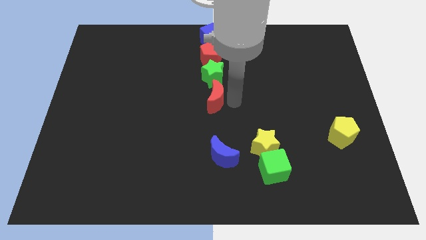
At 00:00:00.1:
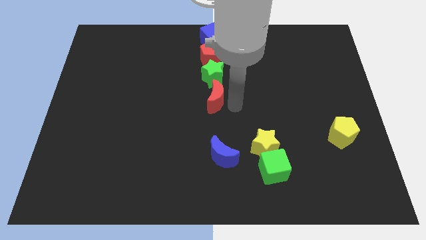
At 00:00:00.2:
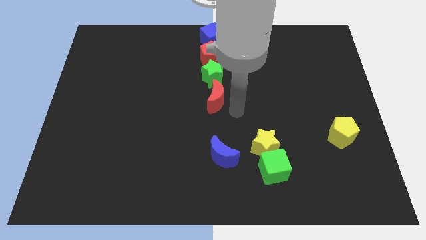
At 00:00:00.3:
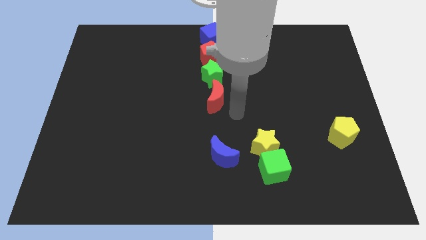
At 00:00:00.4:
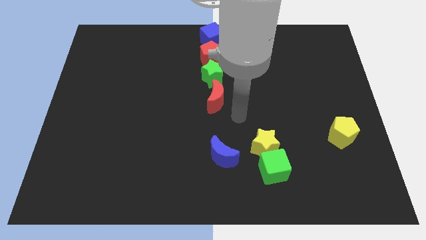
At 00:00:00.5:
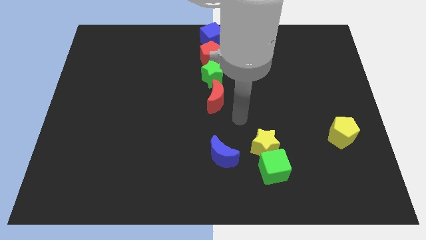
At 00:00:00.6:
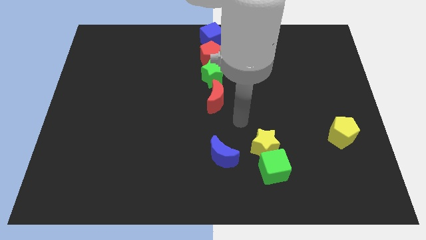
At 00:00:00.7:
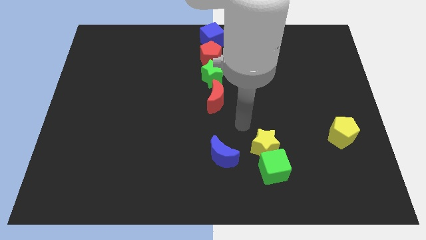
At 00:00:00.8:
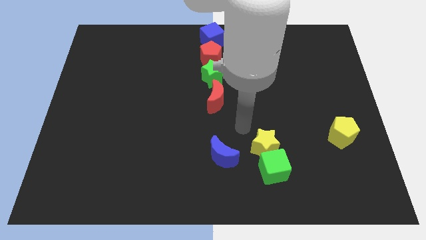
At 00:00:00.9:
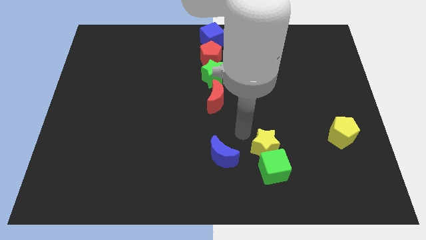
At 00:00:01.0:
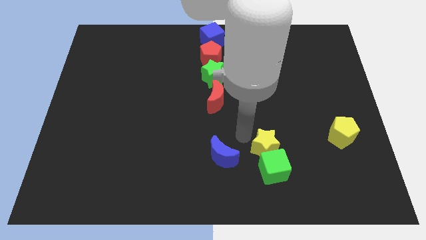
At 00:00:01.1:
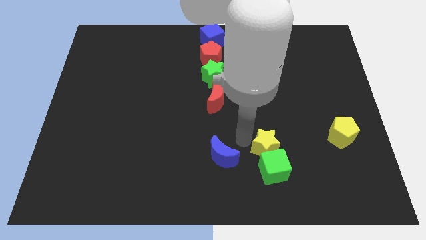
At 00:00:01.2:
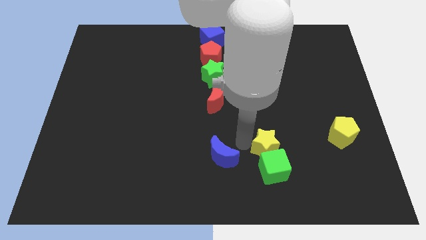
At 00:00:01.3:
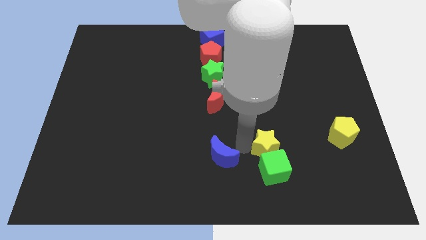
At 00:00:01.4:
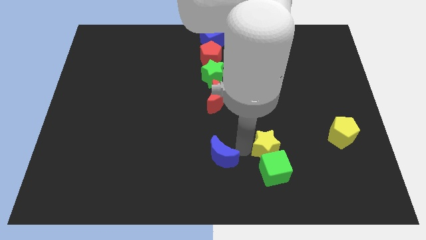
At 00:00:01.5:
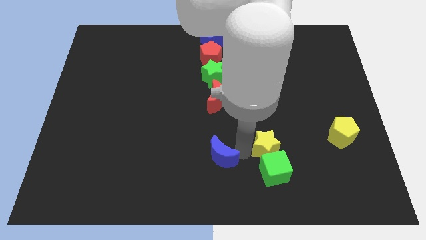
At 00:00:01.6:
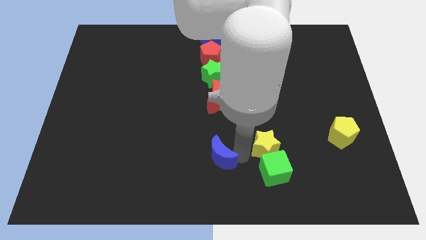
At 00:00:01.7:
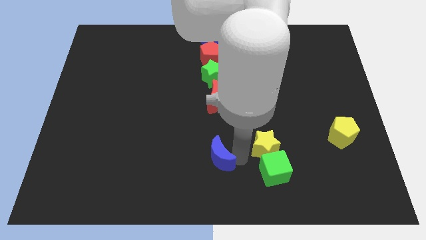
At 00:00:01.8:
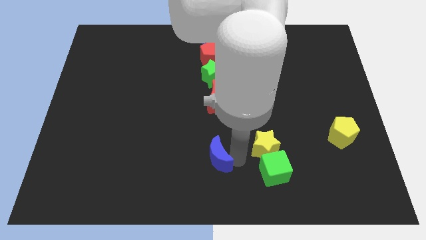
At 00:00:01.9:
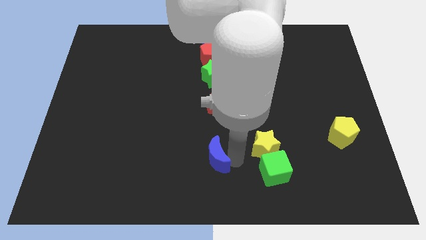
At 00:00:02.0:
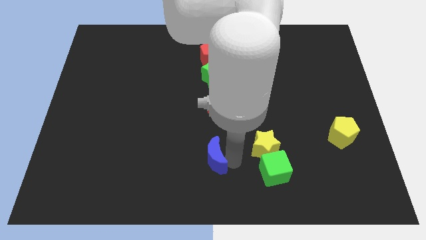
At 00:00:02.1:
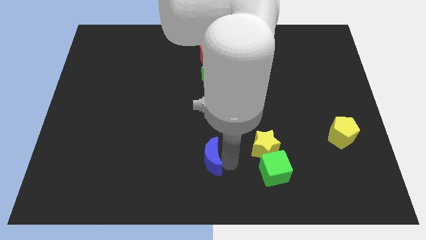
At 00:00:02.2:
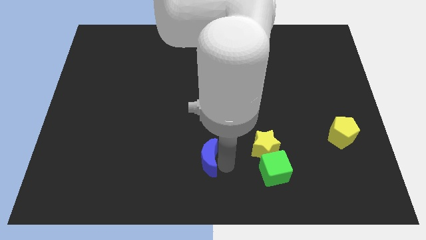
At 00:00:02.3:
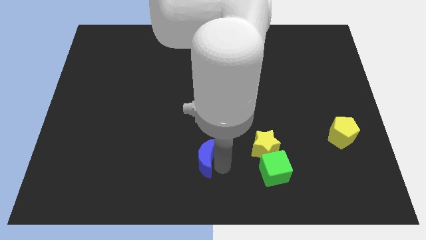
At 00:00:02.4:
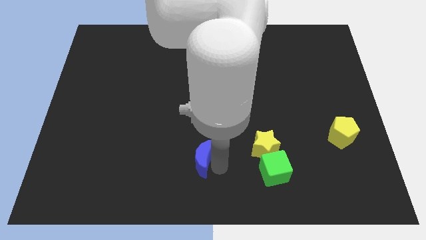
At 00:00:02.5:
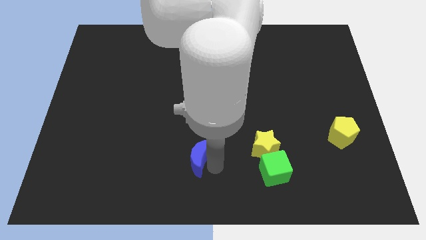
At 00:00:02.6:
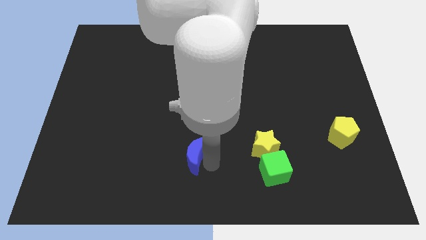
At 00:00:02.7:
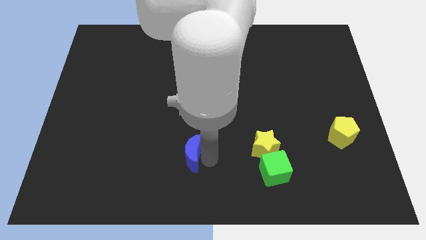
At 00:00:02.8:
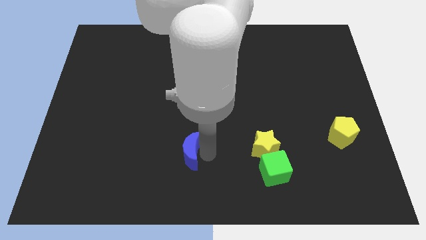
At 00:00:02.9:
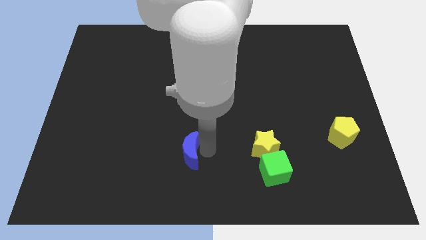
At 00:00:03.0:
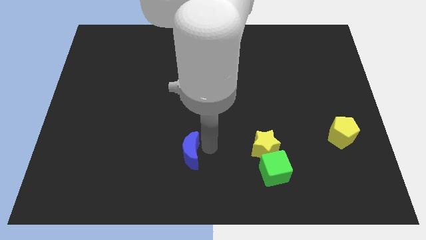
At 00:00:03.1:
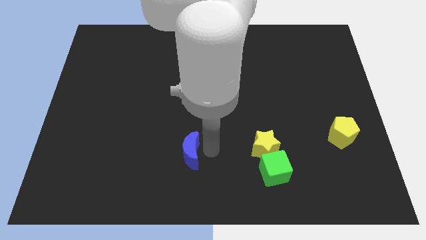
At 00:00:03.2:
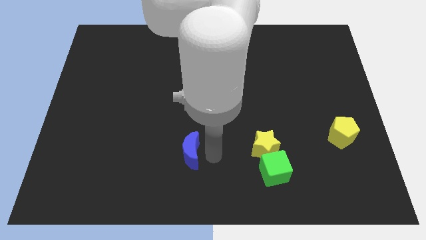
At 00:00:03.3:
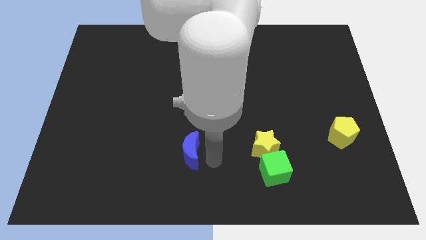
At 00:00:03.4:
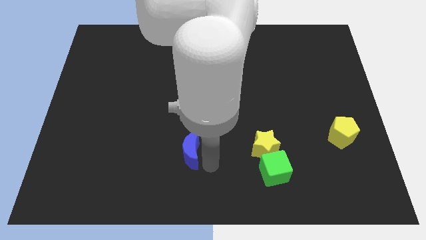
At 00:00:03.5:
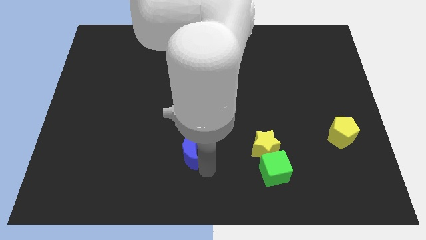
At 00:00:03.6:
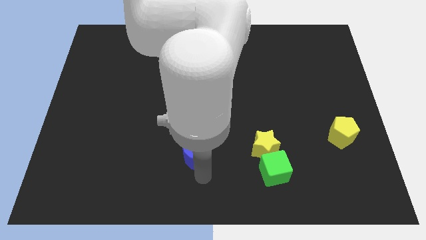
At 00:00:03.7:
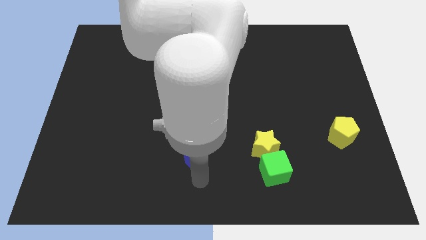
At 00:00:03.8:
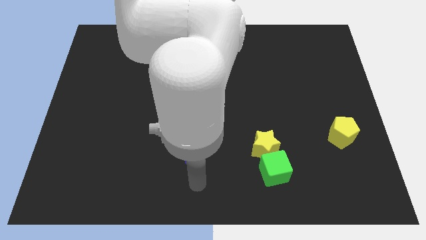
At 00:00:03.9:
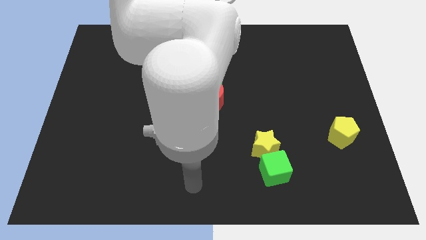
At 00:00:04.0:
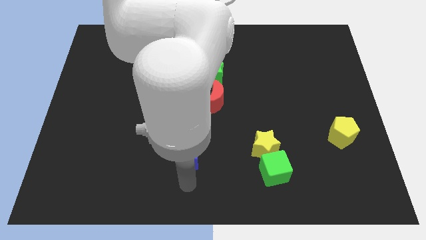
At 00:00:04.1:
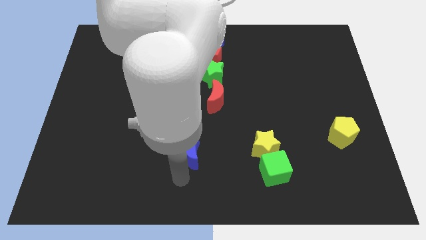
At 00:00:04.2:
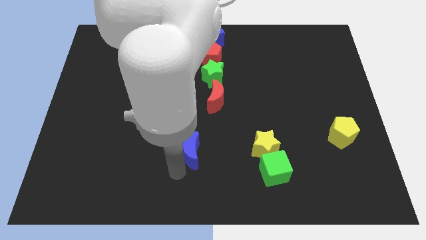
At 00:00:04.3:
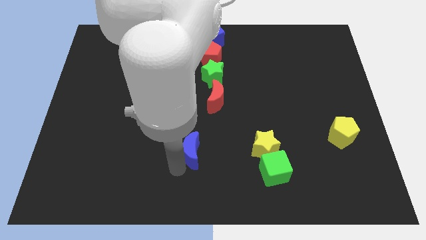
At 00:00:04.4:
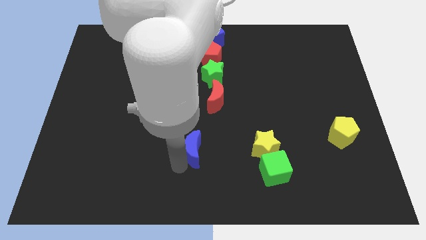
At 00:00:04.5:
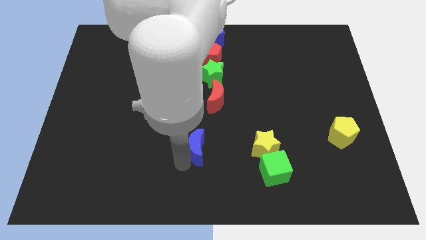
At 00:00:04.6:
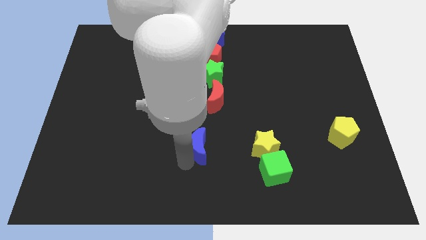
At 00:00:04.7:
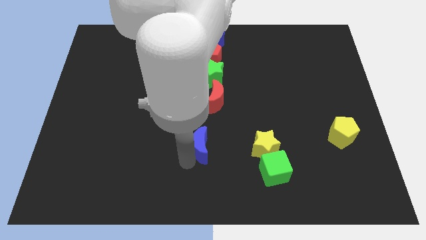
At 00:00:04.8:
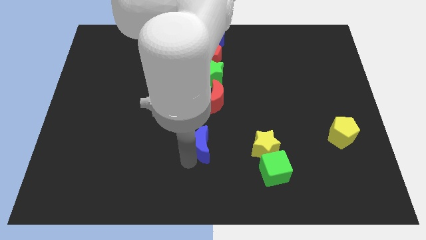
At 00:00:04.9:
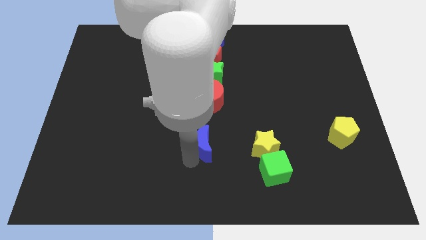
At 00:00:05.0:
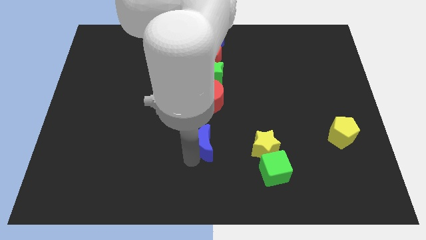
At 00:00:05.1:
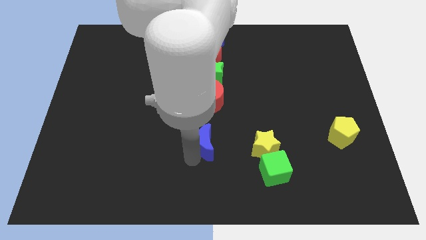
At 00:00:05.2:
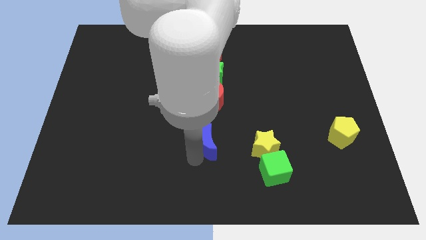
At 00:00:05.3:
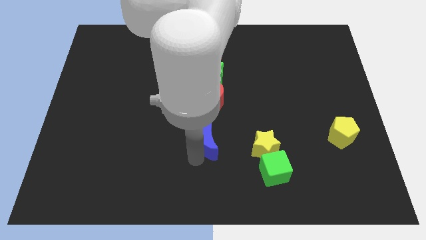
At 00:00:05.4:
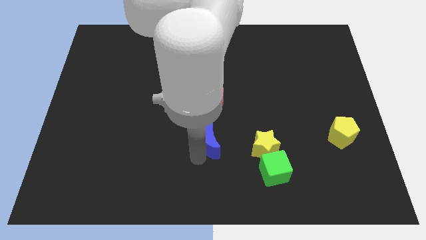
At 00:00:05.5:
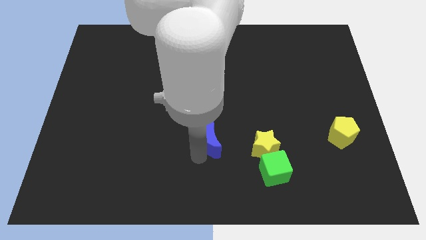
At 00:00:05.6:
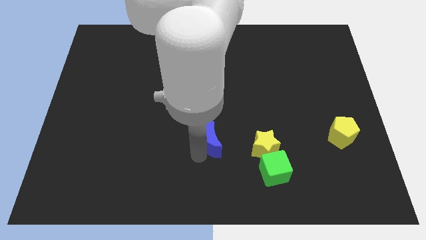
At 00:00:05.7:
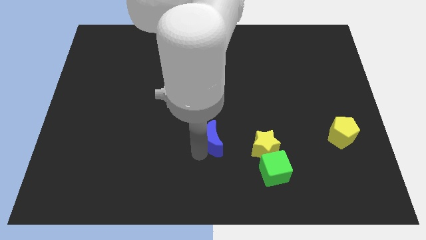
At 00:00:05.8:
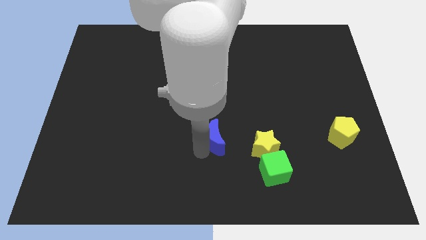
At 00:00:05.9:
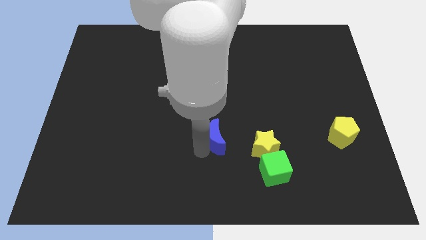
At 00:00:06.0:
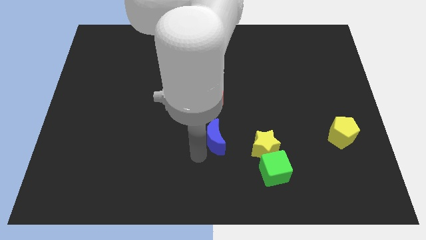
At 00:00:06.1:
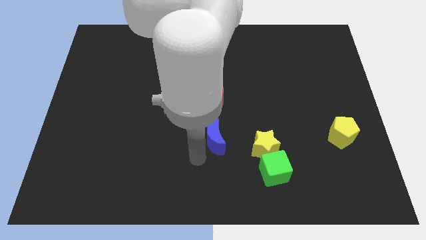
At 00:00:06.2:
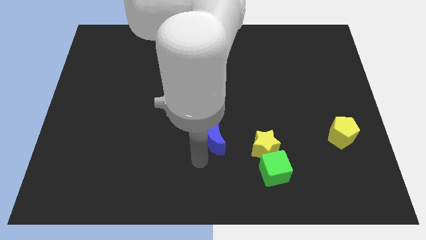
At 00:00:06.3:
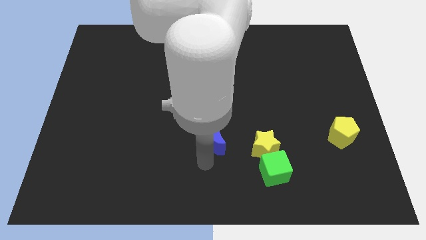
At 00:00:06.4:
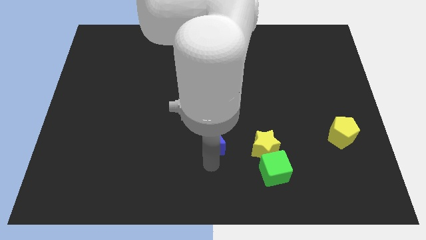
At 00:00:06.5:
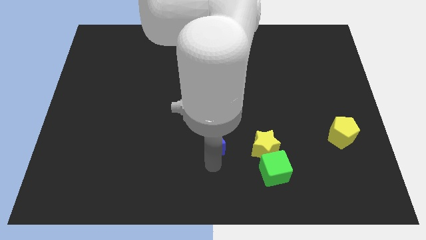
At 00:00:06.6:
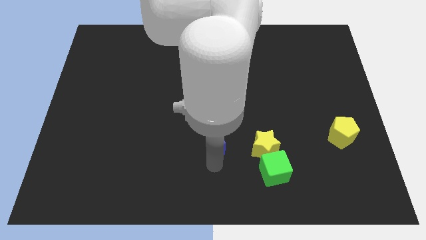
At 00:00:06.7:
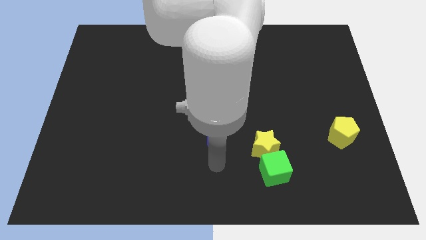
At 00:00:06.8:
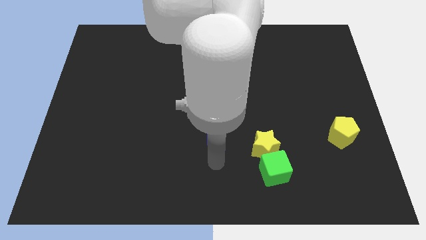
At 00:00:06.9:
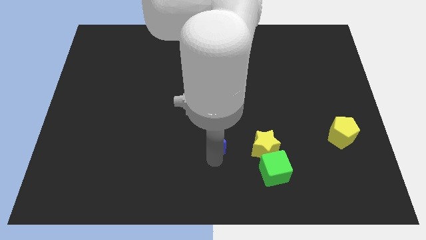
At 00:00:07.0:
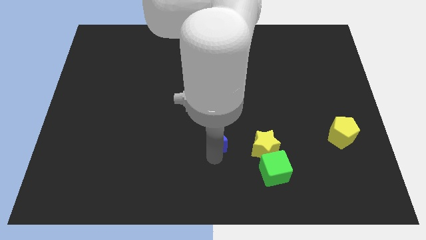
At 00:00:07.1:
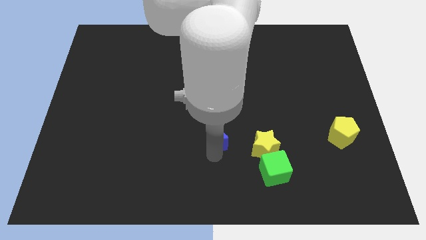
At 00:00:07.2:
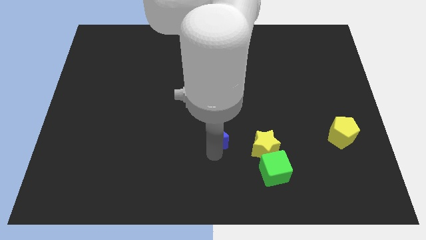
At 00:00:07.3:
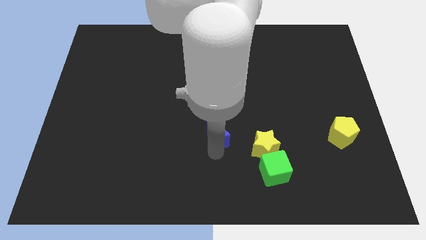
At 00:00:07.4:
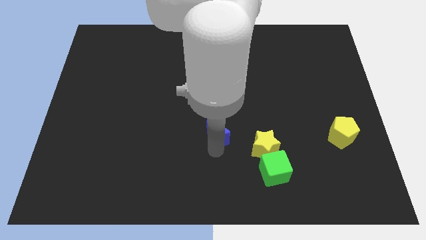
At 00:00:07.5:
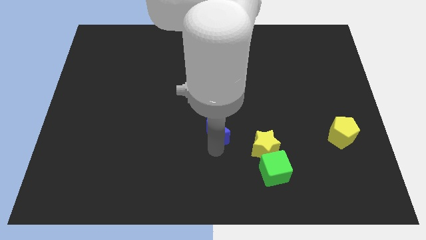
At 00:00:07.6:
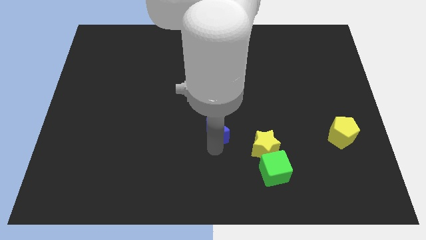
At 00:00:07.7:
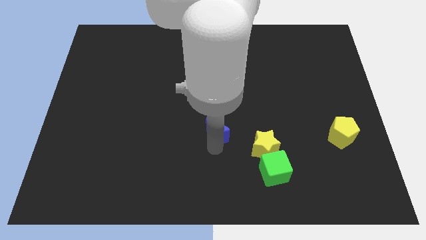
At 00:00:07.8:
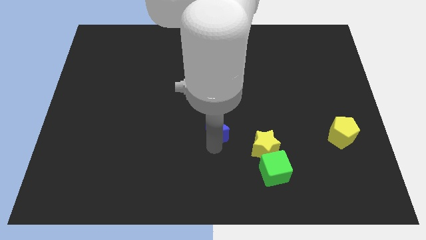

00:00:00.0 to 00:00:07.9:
move the blue crescent to the bottom of the red crescent

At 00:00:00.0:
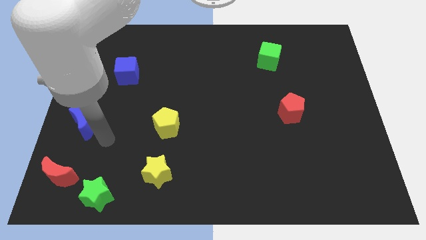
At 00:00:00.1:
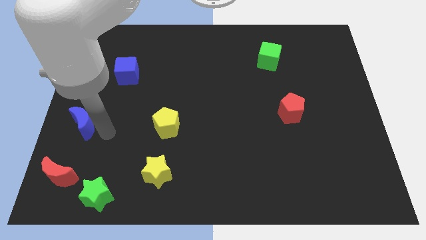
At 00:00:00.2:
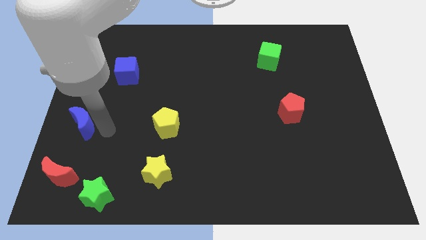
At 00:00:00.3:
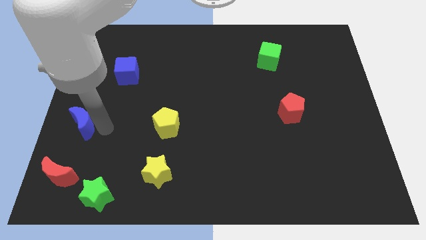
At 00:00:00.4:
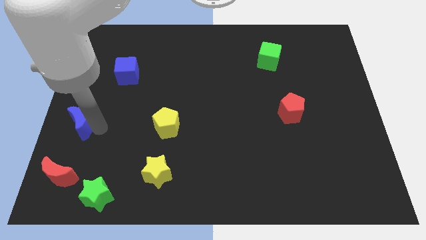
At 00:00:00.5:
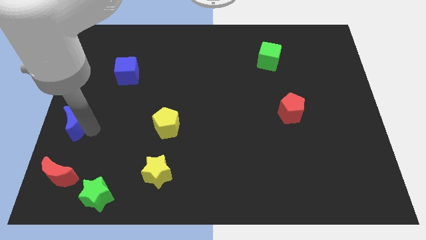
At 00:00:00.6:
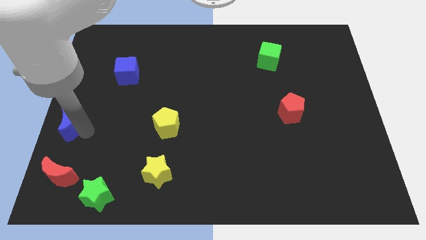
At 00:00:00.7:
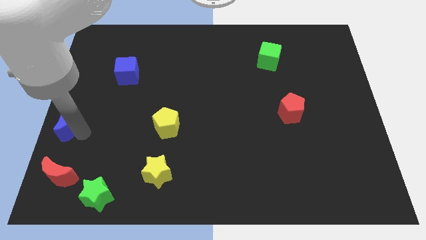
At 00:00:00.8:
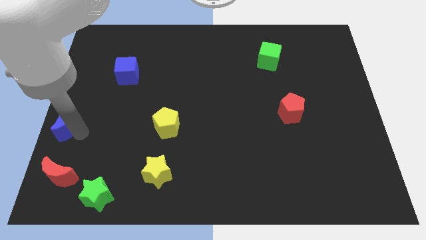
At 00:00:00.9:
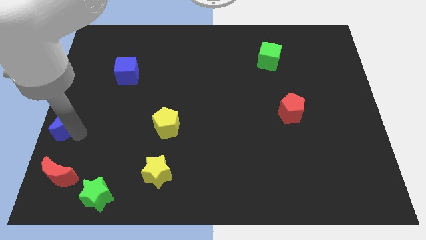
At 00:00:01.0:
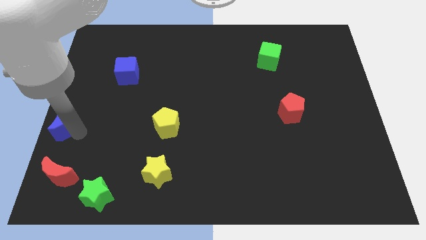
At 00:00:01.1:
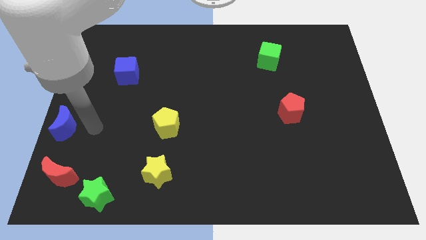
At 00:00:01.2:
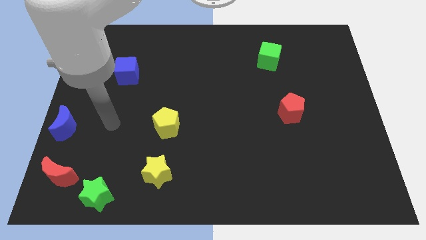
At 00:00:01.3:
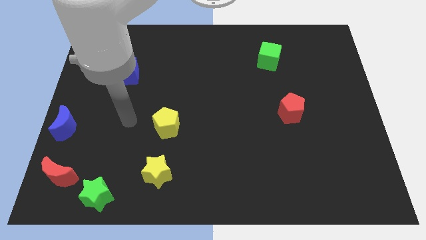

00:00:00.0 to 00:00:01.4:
move the blue crescent to the left
